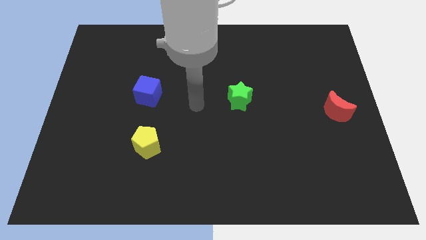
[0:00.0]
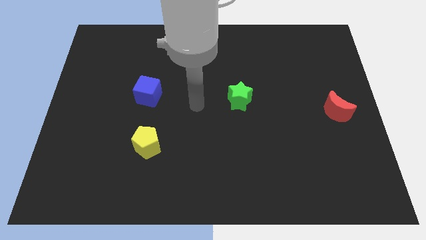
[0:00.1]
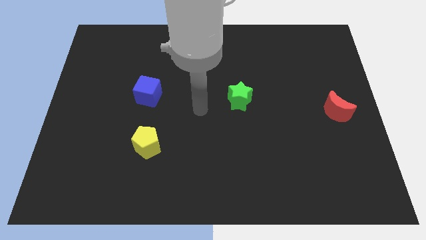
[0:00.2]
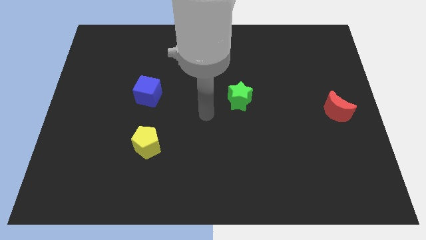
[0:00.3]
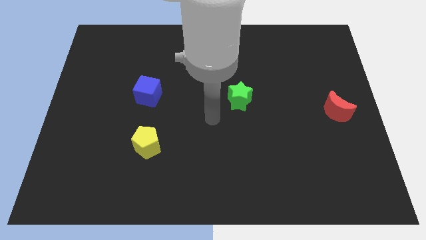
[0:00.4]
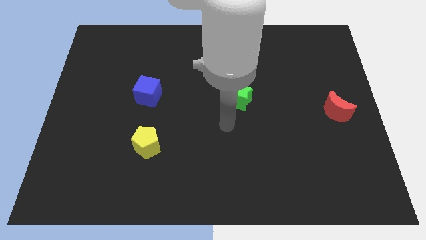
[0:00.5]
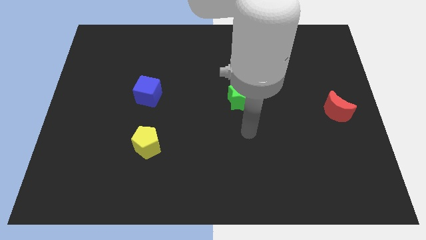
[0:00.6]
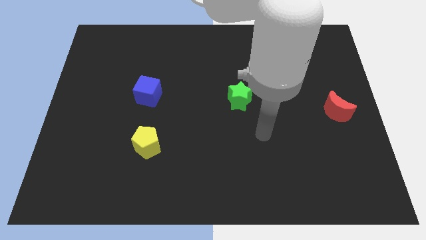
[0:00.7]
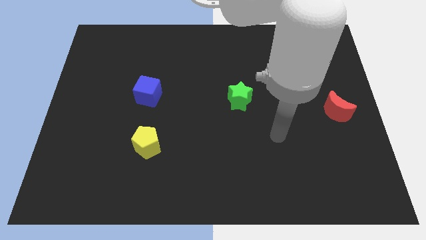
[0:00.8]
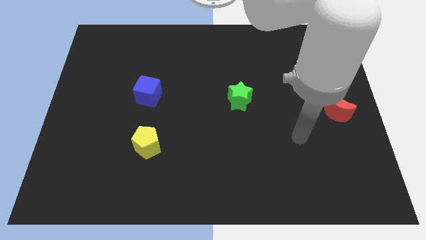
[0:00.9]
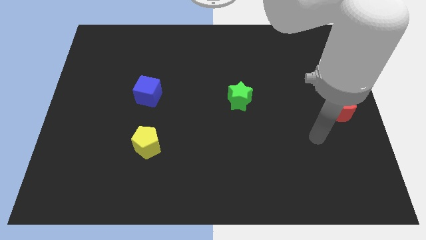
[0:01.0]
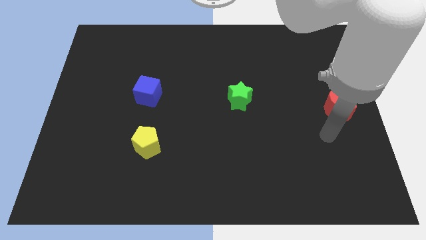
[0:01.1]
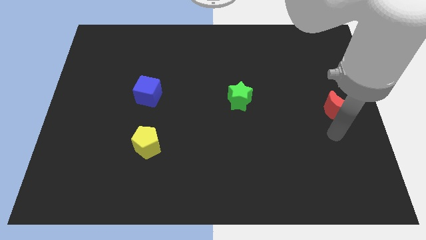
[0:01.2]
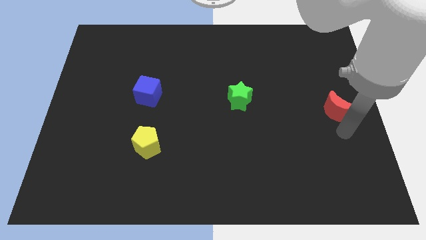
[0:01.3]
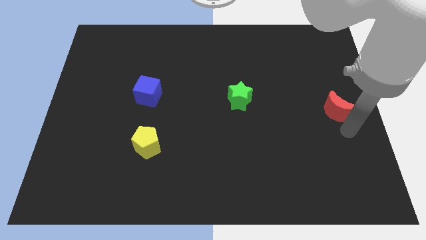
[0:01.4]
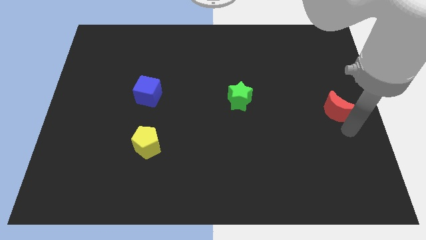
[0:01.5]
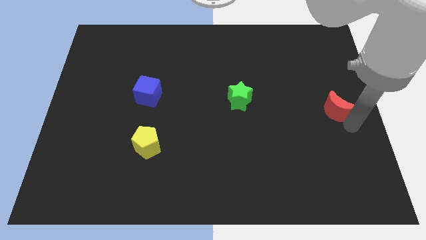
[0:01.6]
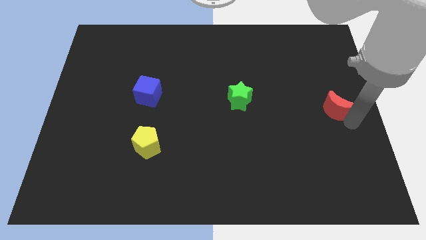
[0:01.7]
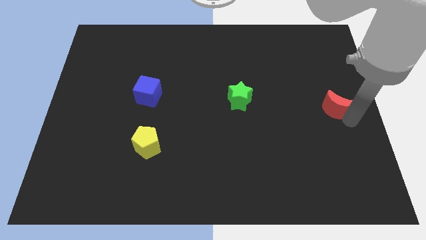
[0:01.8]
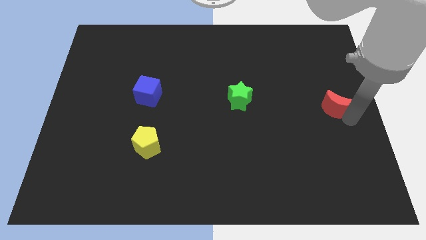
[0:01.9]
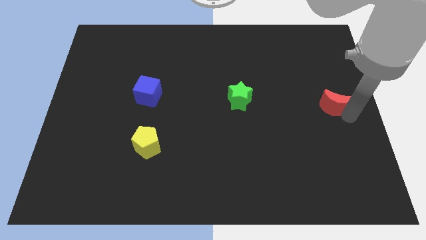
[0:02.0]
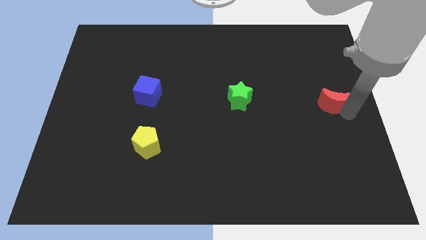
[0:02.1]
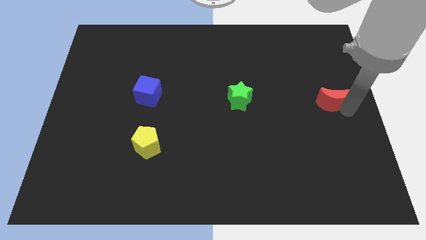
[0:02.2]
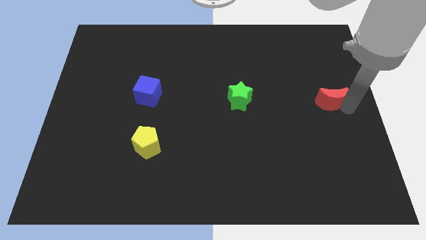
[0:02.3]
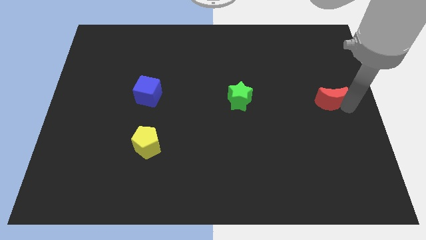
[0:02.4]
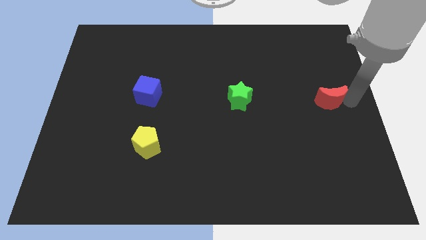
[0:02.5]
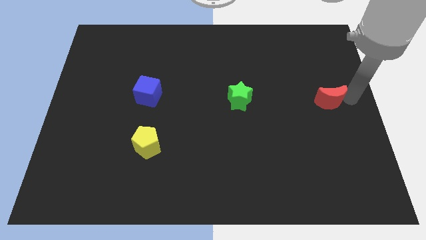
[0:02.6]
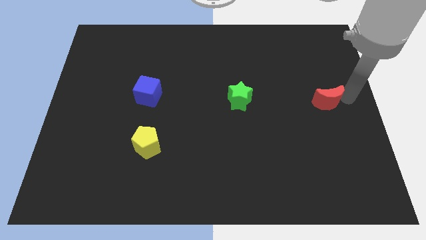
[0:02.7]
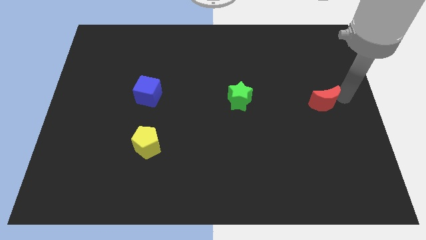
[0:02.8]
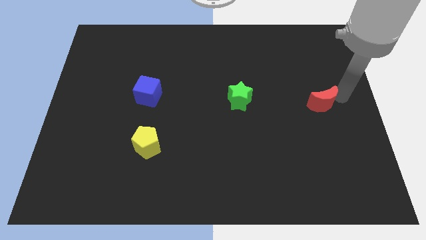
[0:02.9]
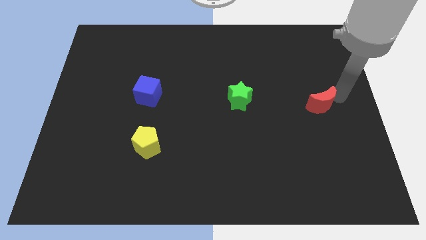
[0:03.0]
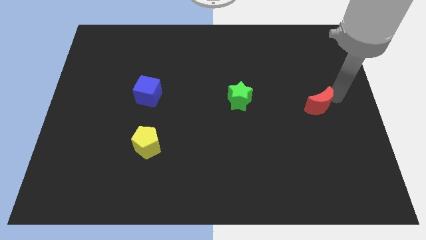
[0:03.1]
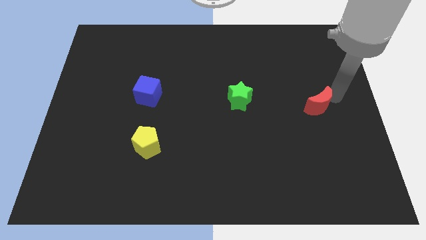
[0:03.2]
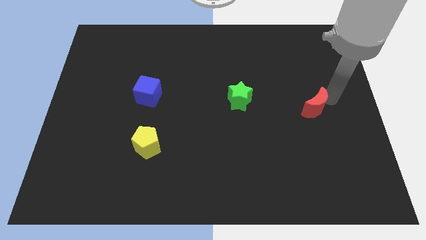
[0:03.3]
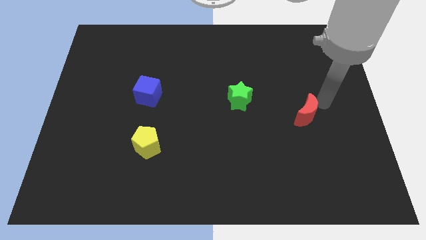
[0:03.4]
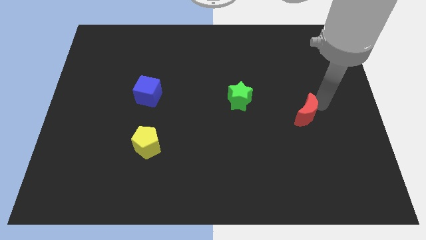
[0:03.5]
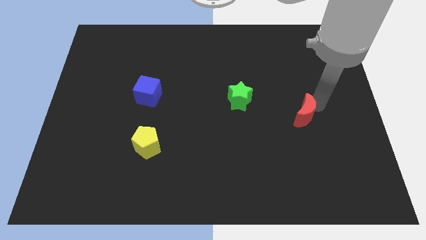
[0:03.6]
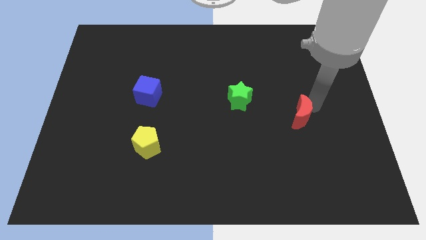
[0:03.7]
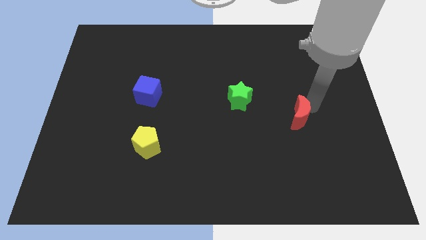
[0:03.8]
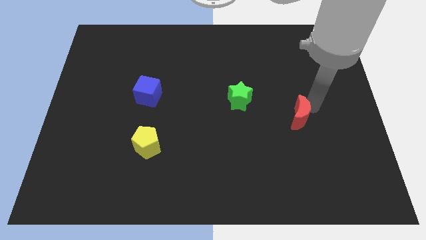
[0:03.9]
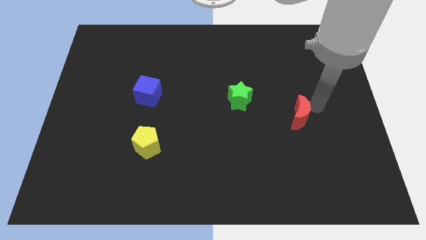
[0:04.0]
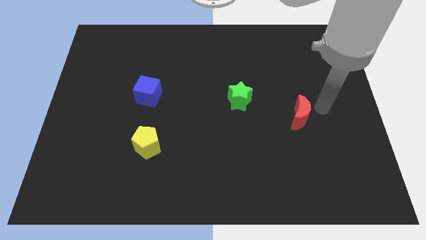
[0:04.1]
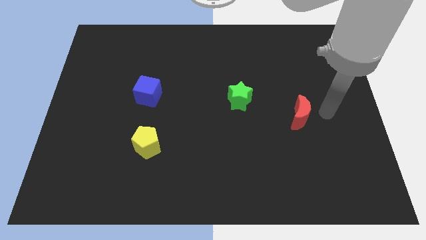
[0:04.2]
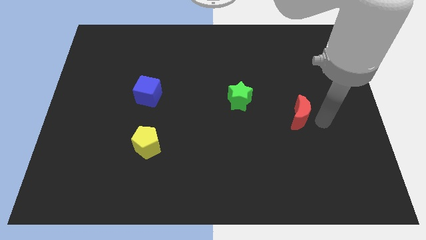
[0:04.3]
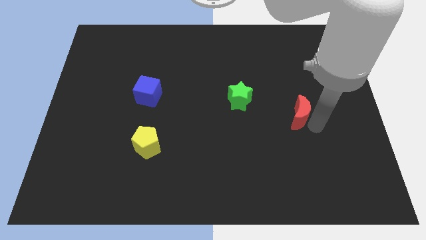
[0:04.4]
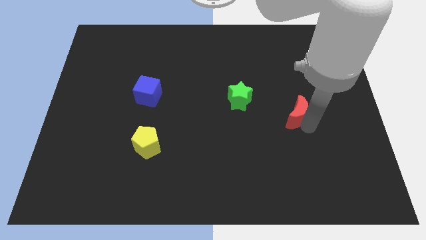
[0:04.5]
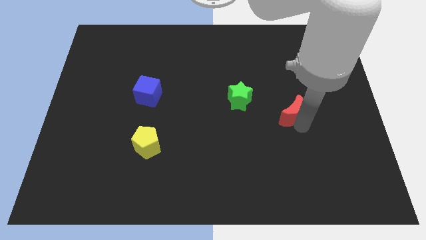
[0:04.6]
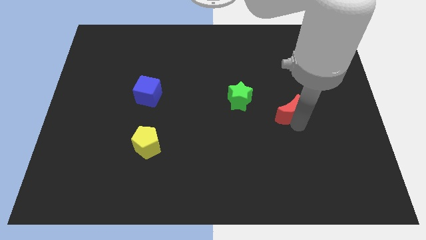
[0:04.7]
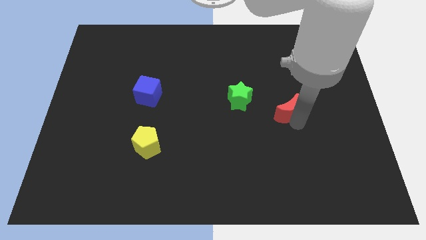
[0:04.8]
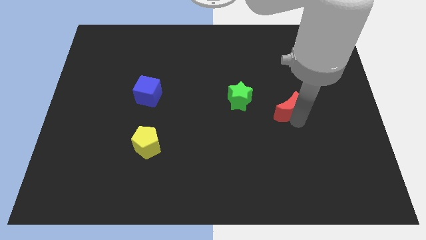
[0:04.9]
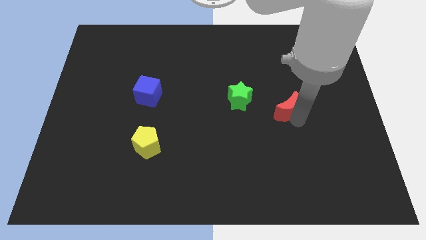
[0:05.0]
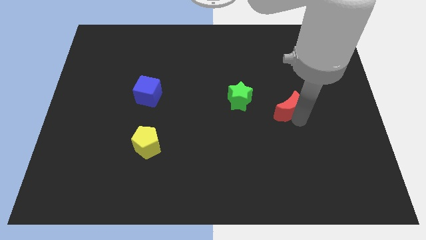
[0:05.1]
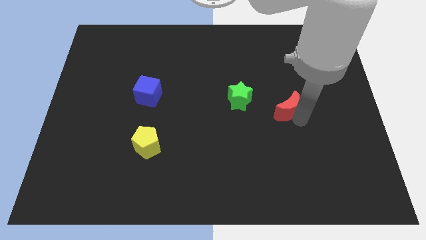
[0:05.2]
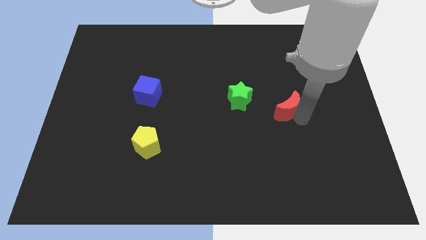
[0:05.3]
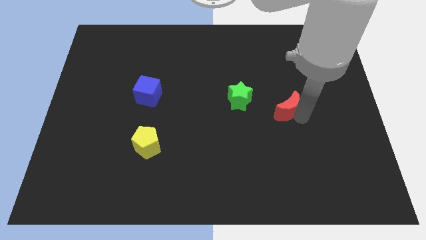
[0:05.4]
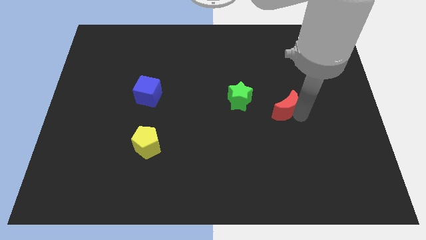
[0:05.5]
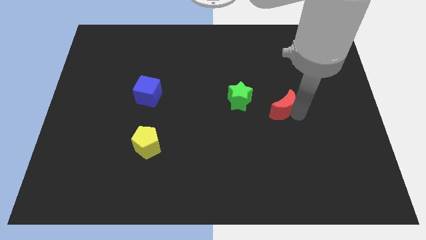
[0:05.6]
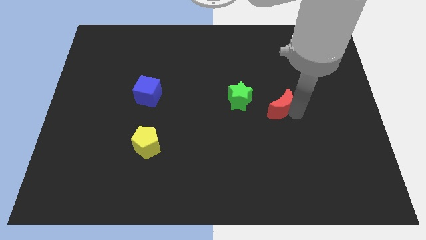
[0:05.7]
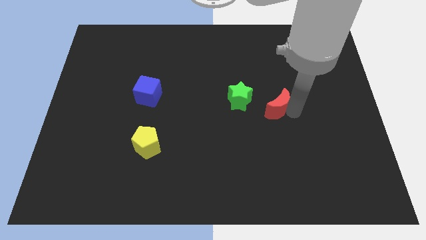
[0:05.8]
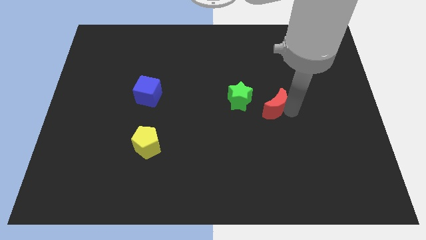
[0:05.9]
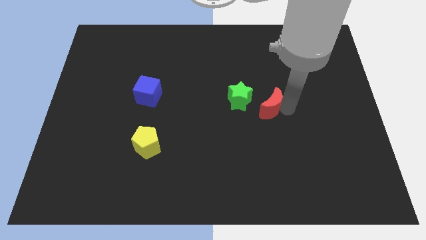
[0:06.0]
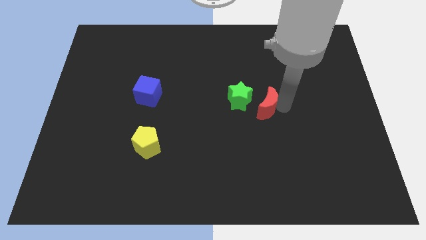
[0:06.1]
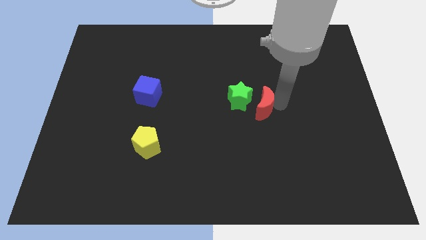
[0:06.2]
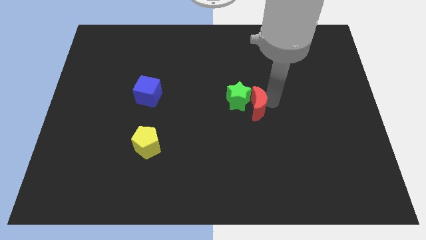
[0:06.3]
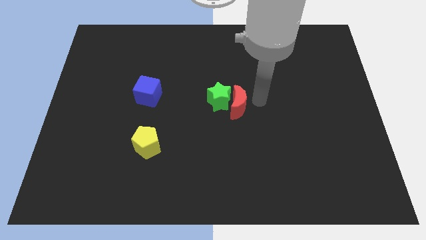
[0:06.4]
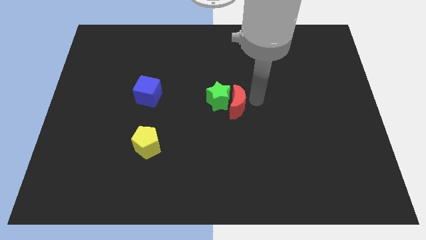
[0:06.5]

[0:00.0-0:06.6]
push the red block close to the green block

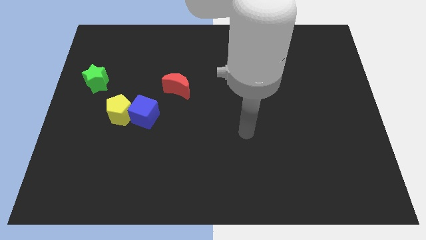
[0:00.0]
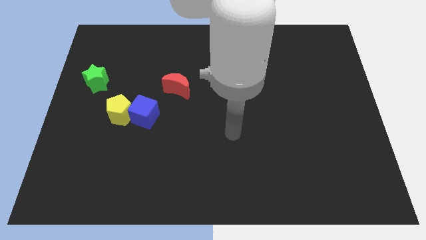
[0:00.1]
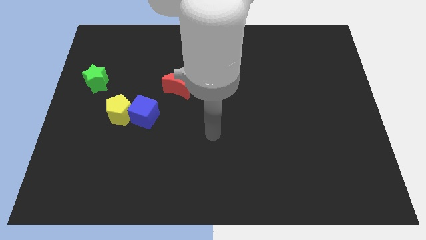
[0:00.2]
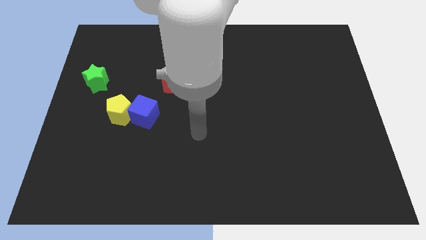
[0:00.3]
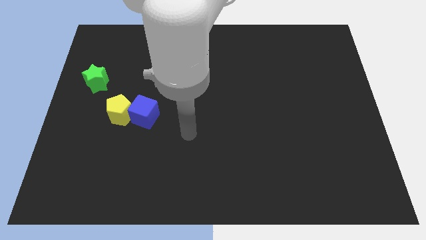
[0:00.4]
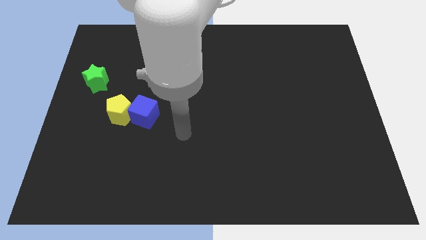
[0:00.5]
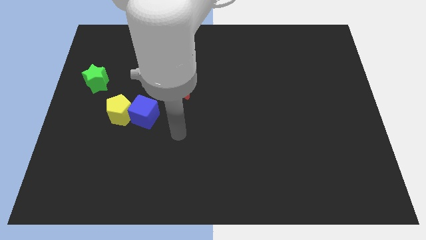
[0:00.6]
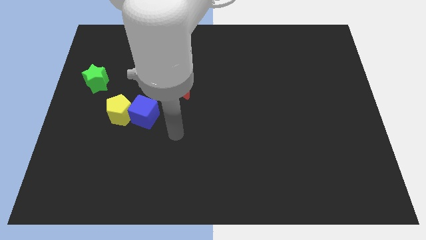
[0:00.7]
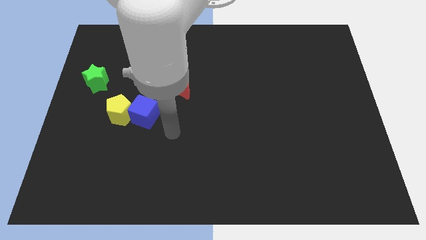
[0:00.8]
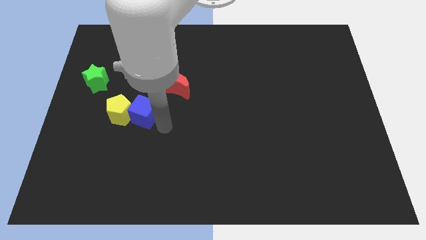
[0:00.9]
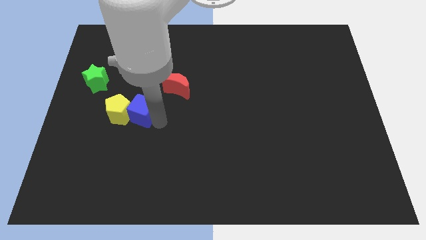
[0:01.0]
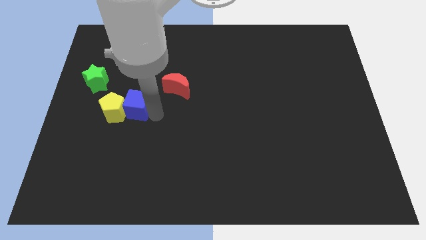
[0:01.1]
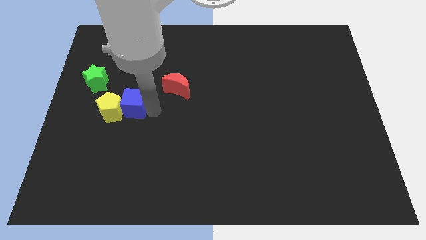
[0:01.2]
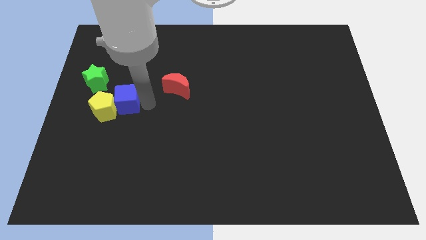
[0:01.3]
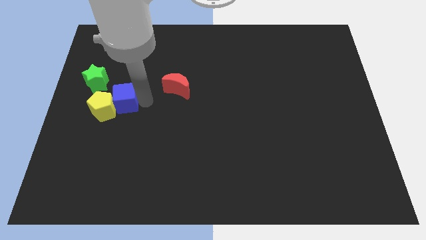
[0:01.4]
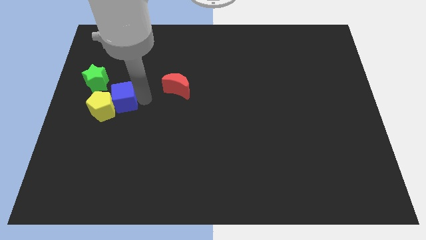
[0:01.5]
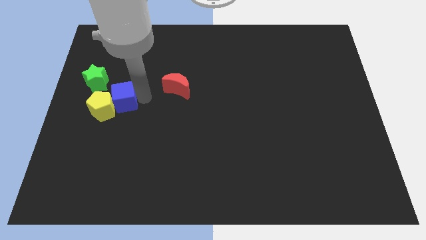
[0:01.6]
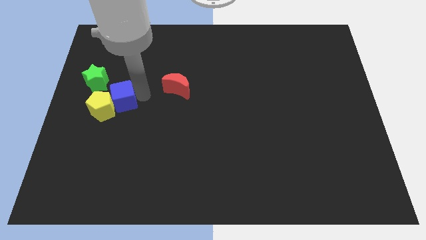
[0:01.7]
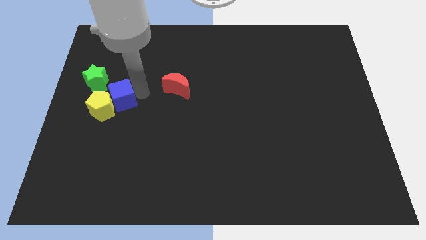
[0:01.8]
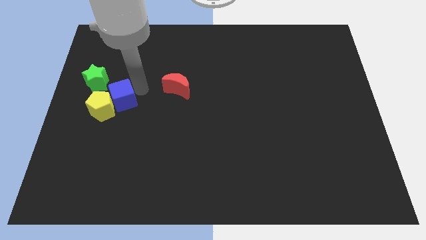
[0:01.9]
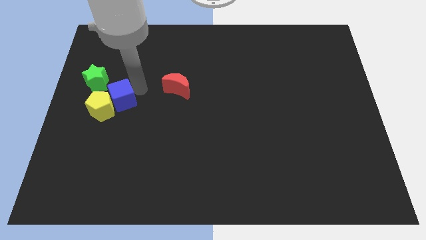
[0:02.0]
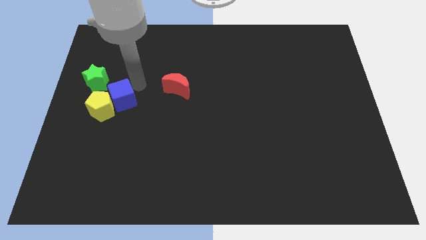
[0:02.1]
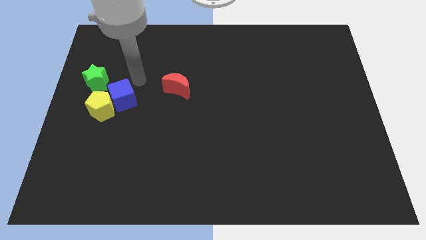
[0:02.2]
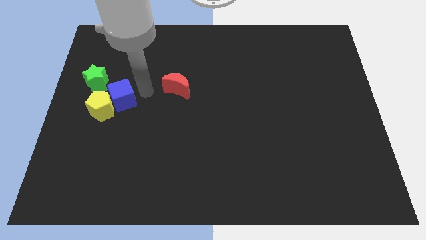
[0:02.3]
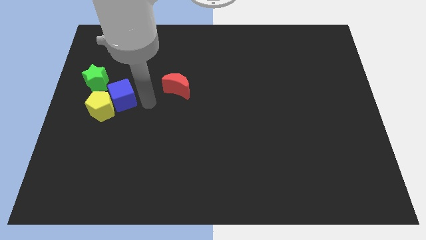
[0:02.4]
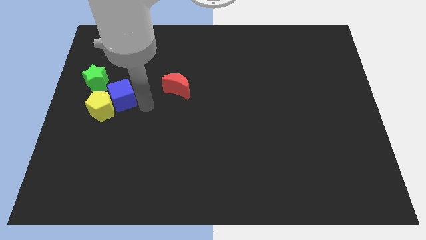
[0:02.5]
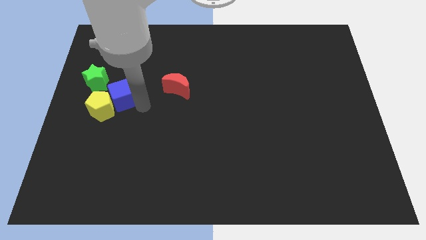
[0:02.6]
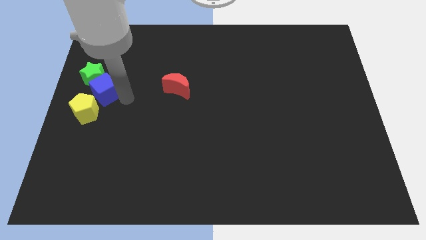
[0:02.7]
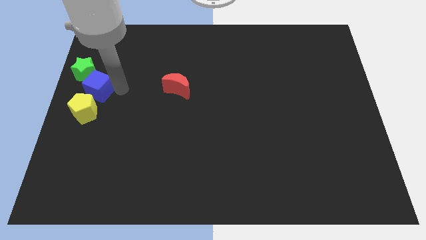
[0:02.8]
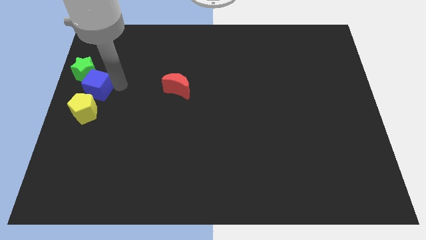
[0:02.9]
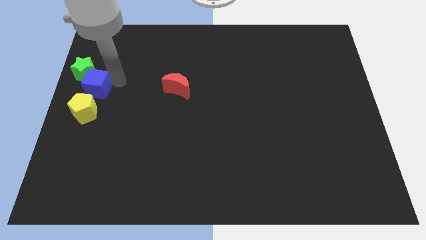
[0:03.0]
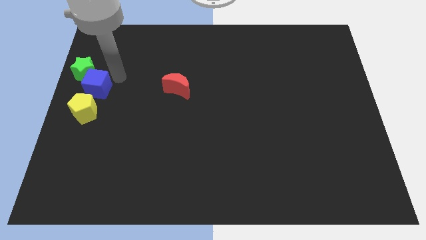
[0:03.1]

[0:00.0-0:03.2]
slide the cube towards the star
